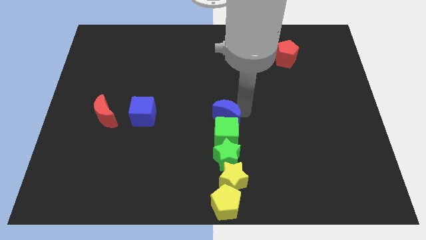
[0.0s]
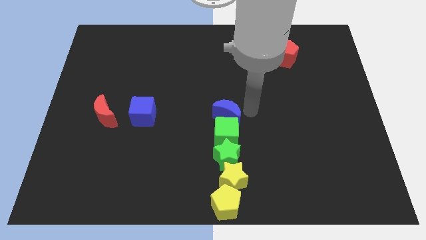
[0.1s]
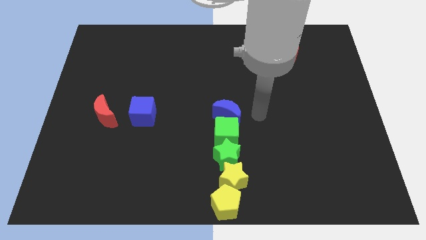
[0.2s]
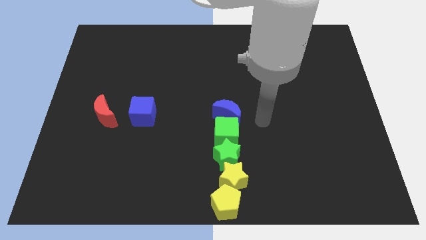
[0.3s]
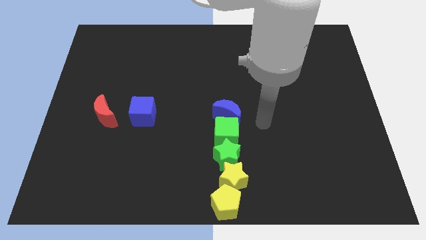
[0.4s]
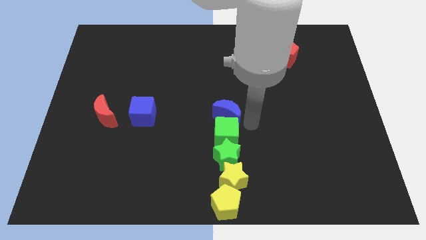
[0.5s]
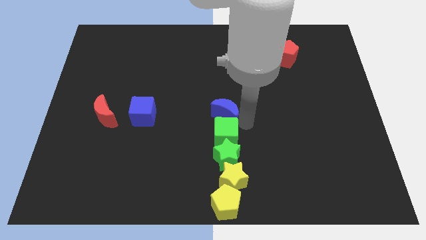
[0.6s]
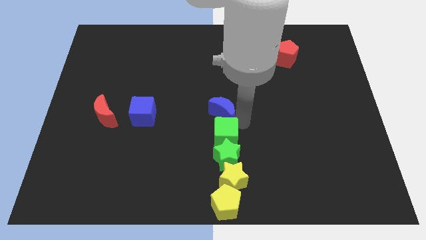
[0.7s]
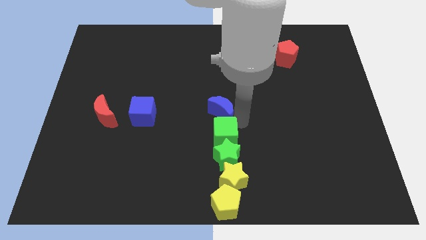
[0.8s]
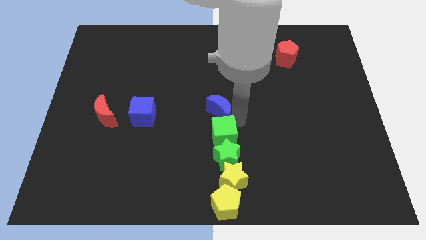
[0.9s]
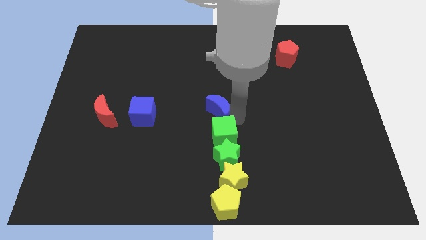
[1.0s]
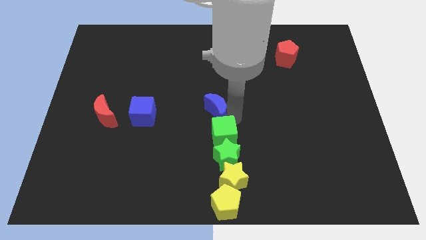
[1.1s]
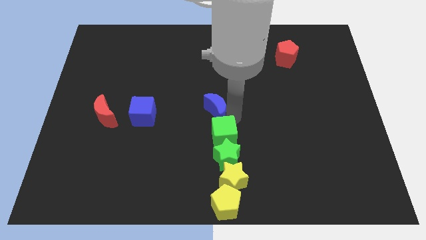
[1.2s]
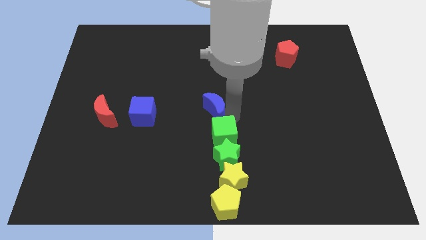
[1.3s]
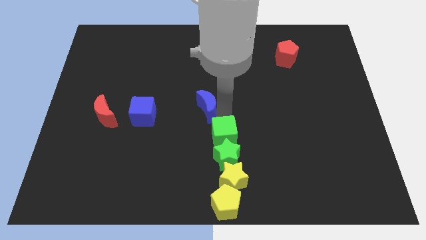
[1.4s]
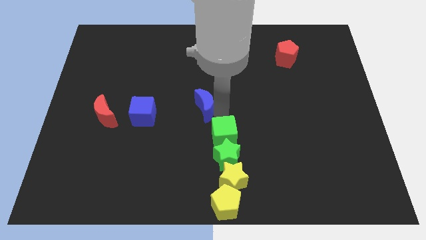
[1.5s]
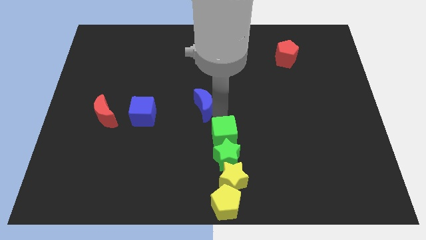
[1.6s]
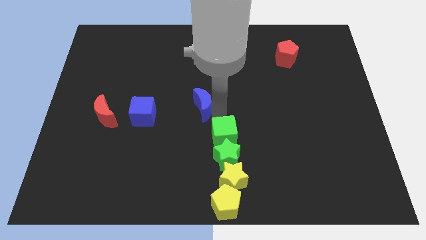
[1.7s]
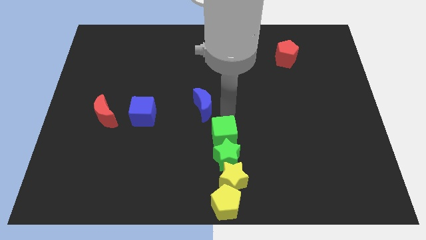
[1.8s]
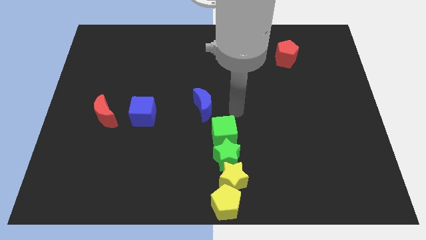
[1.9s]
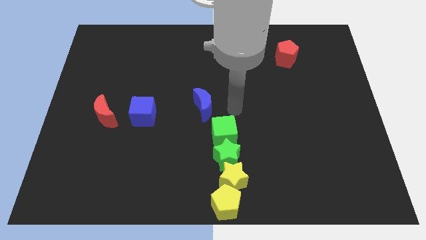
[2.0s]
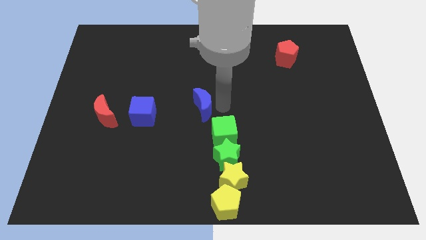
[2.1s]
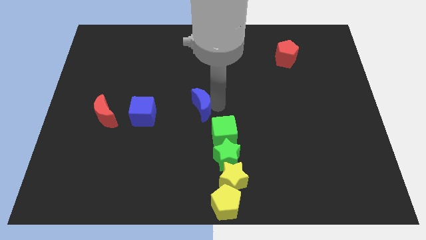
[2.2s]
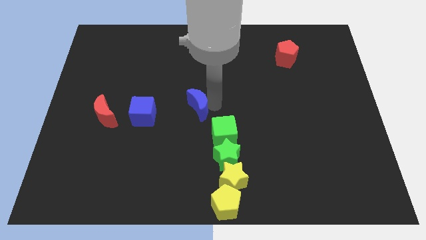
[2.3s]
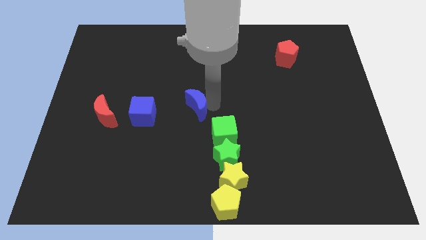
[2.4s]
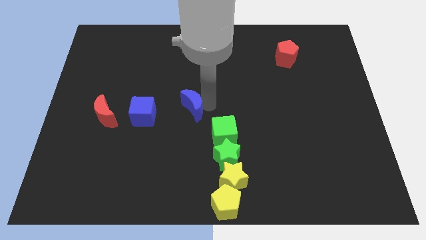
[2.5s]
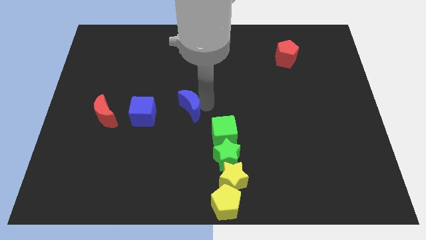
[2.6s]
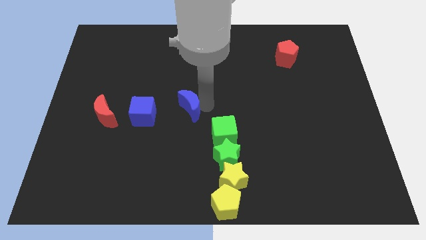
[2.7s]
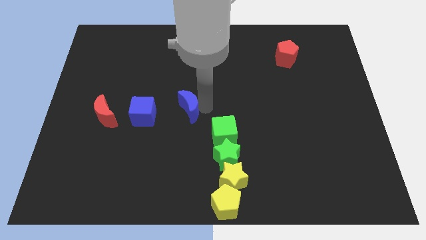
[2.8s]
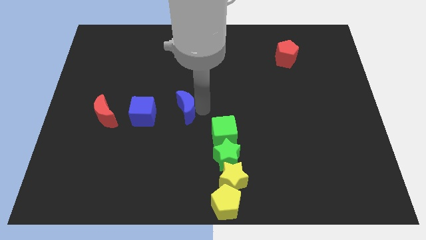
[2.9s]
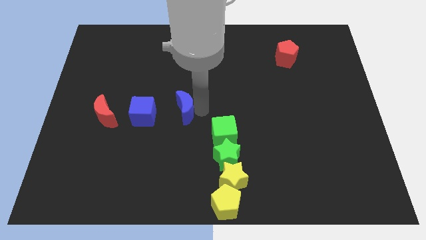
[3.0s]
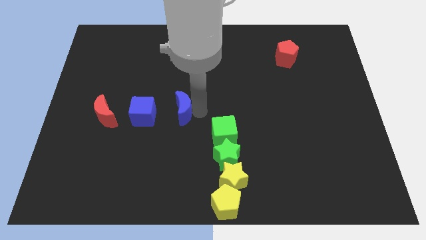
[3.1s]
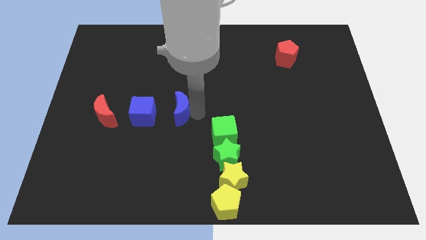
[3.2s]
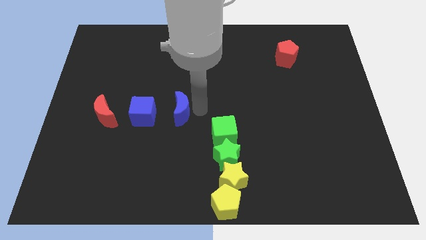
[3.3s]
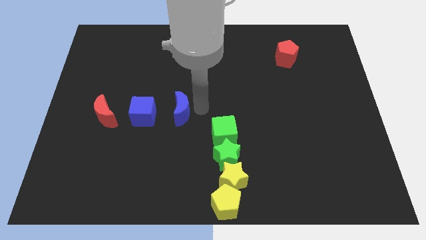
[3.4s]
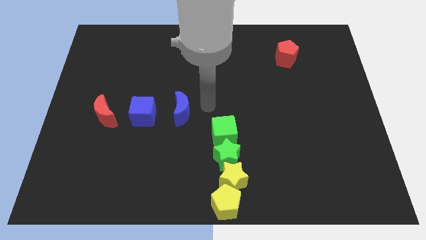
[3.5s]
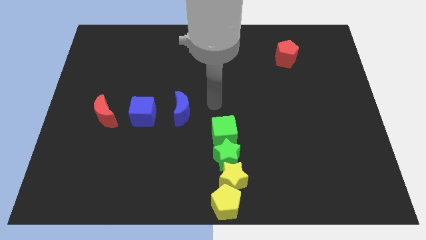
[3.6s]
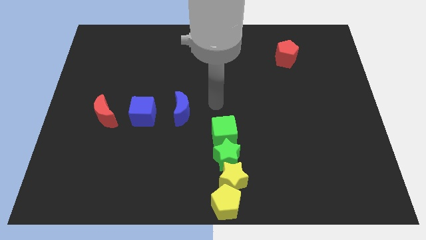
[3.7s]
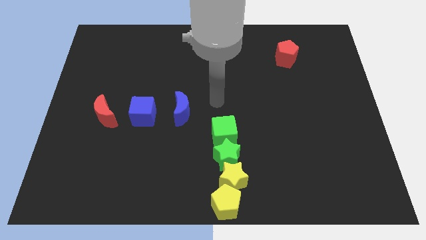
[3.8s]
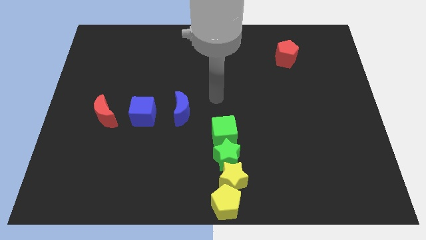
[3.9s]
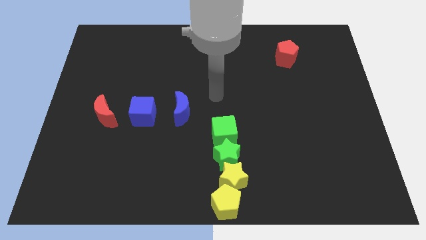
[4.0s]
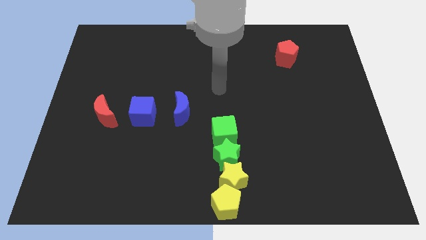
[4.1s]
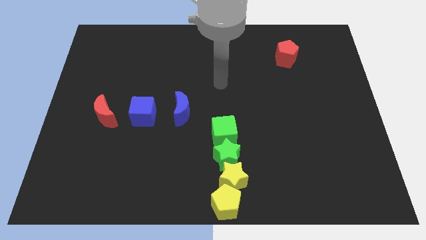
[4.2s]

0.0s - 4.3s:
push the blue crescent horizontally to the right side of the blue cube

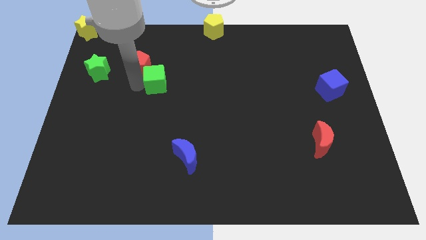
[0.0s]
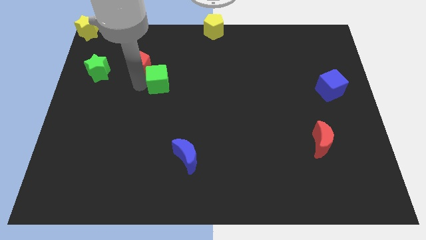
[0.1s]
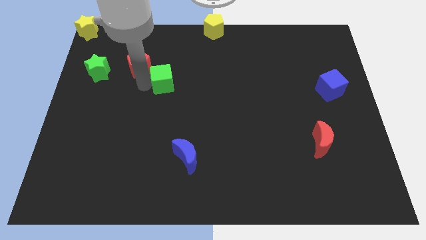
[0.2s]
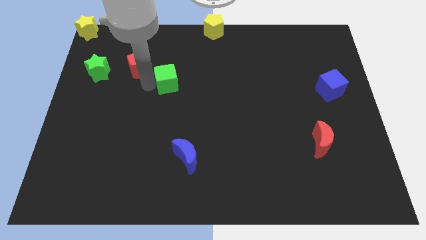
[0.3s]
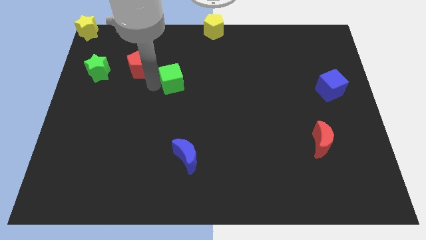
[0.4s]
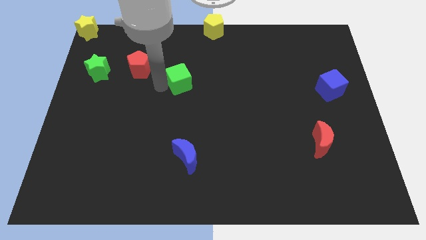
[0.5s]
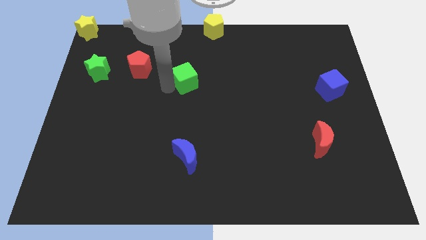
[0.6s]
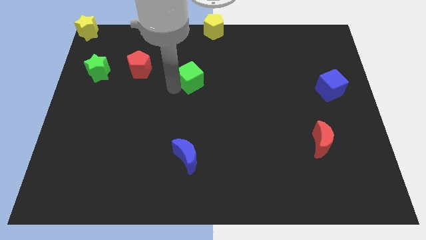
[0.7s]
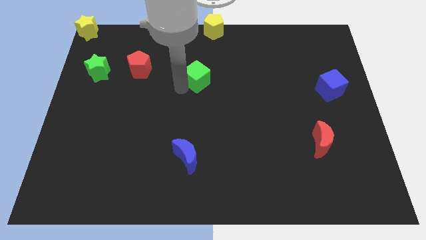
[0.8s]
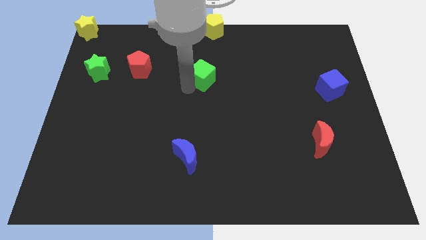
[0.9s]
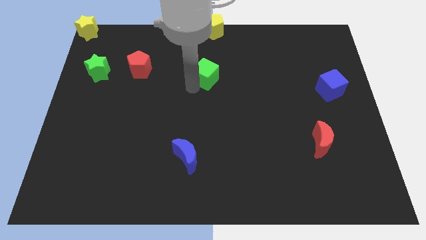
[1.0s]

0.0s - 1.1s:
move green cube below the yellow pentagon

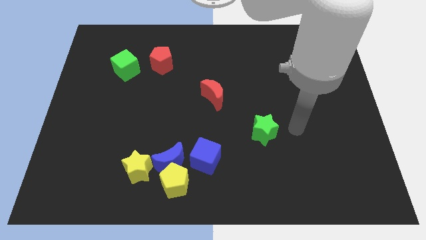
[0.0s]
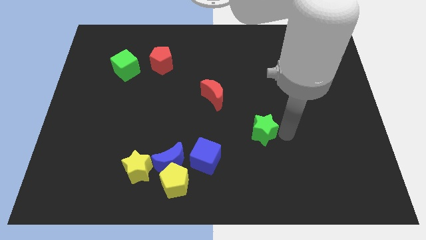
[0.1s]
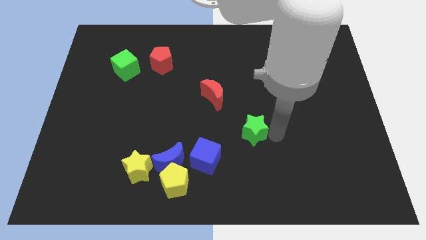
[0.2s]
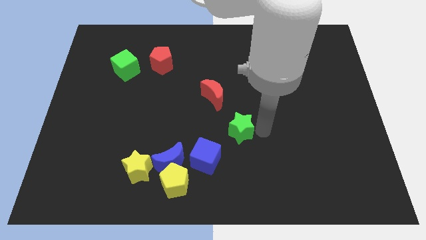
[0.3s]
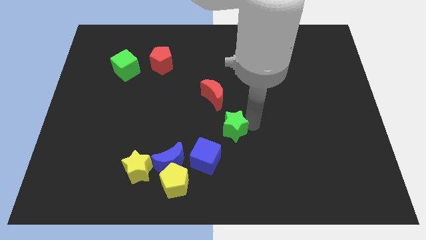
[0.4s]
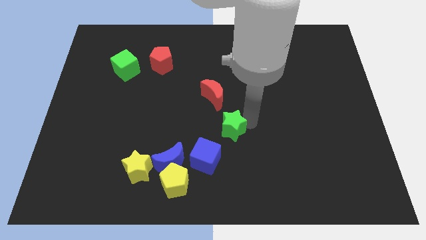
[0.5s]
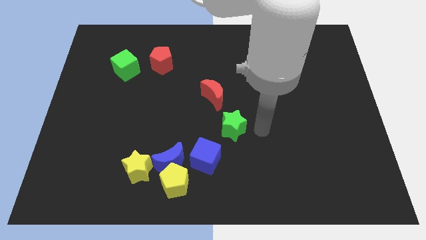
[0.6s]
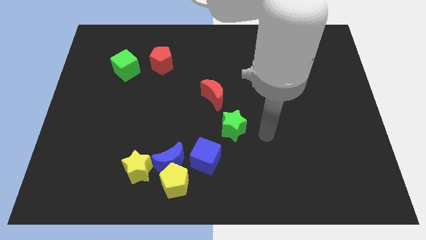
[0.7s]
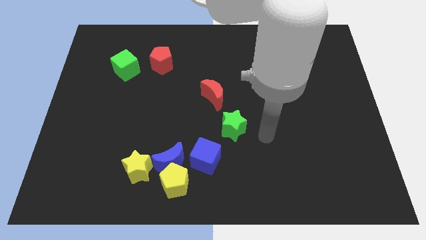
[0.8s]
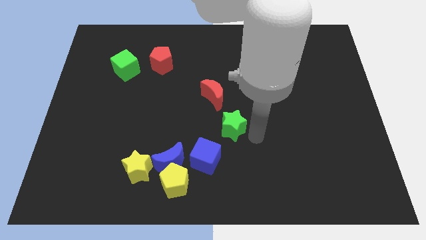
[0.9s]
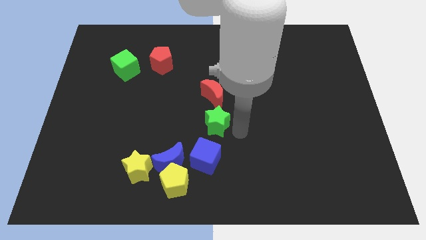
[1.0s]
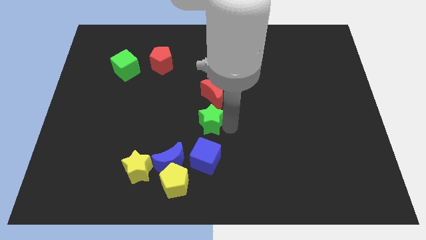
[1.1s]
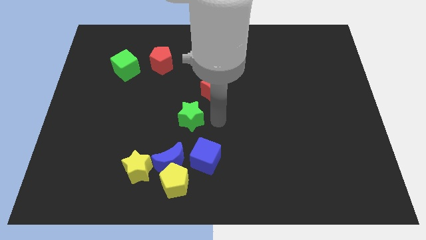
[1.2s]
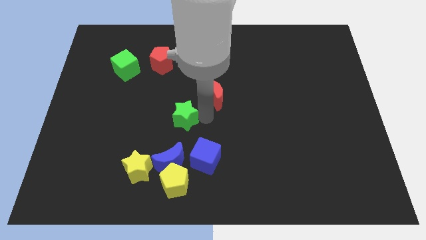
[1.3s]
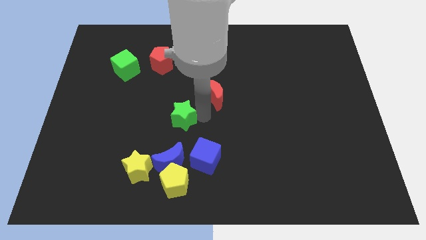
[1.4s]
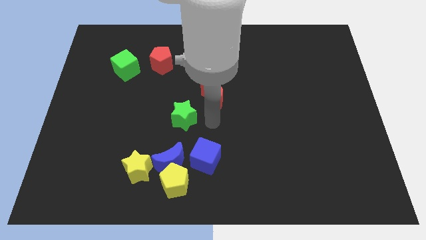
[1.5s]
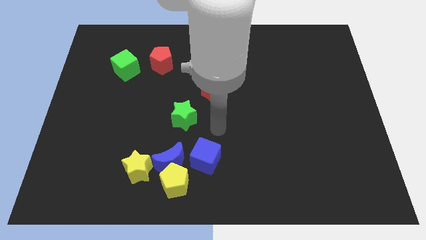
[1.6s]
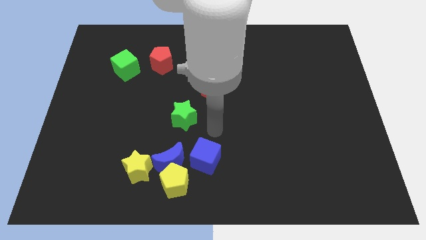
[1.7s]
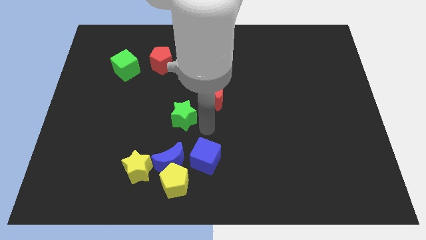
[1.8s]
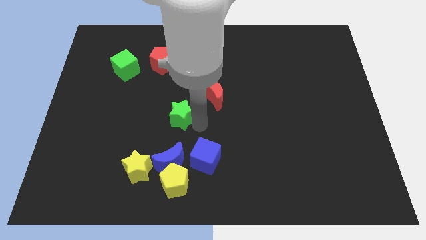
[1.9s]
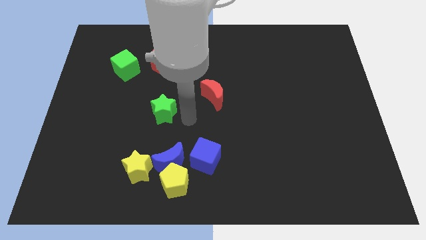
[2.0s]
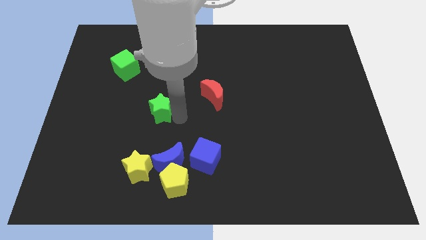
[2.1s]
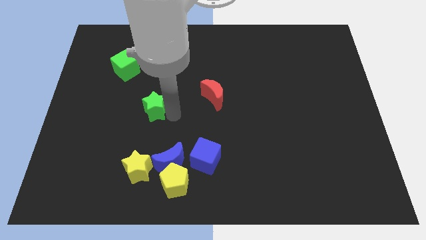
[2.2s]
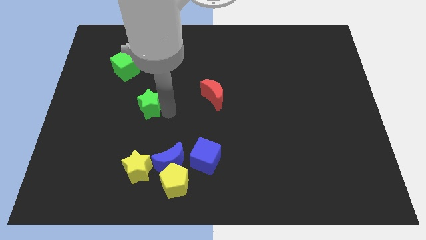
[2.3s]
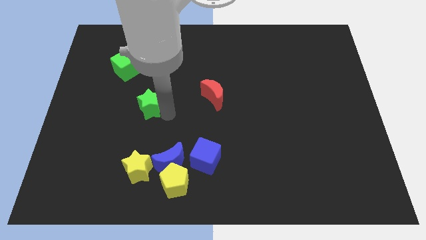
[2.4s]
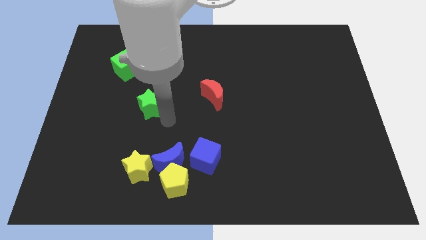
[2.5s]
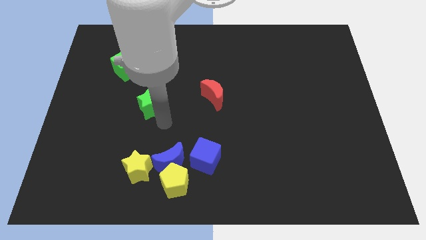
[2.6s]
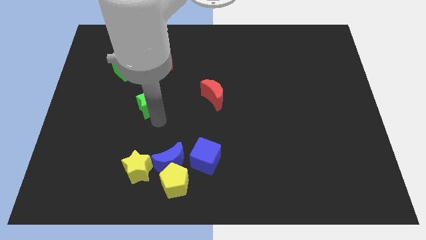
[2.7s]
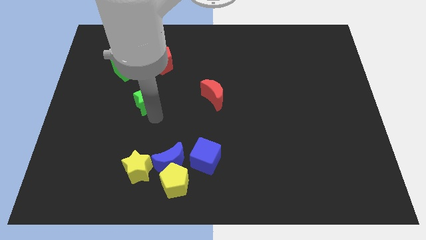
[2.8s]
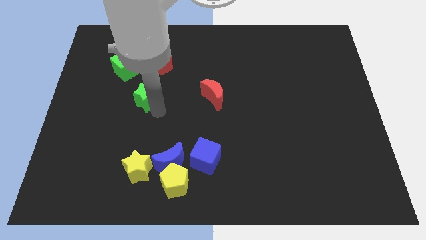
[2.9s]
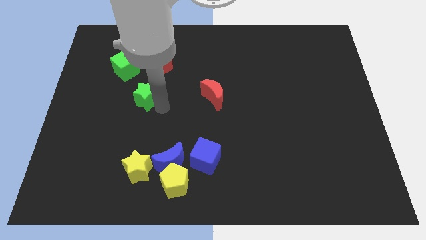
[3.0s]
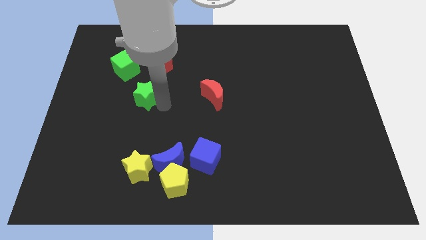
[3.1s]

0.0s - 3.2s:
place the green star towards green cube bottom

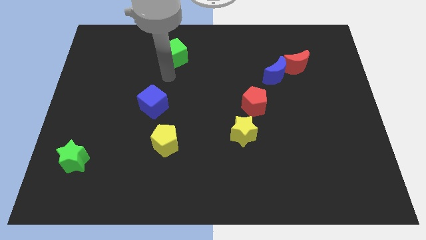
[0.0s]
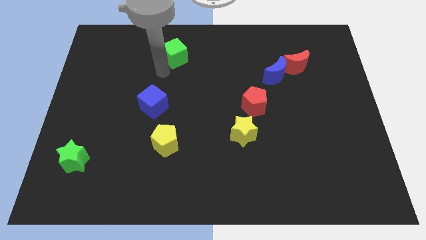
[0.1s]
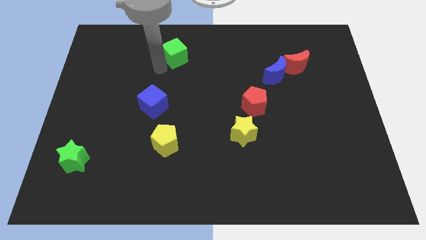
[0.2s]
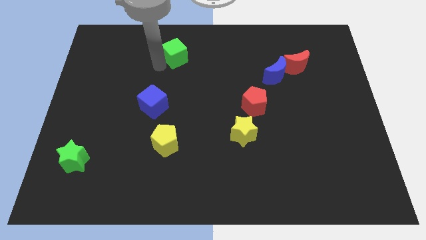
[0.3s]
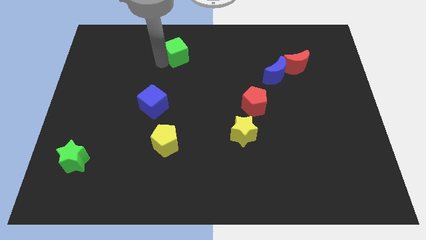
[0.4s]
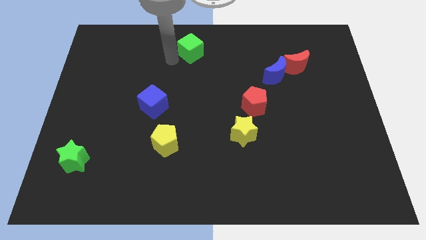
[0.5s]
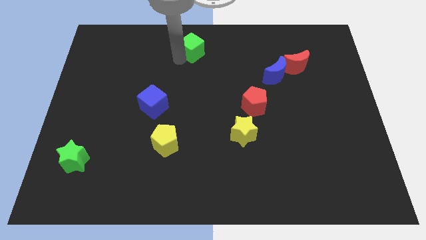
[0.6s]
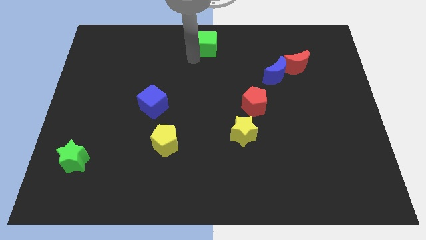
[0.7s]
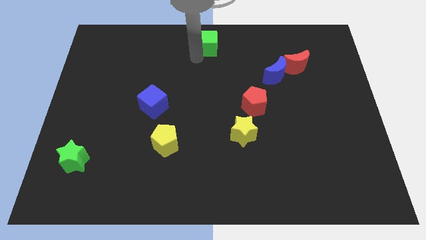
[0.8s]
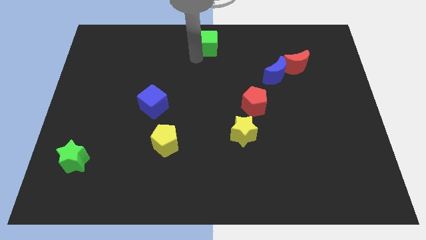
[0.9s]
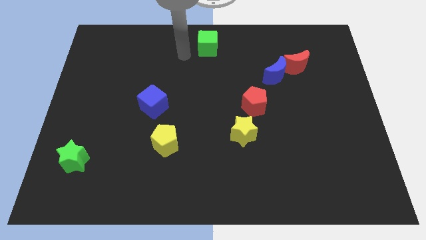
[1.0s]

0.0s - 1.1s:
move the green star to the top center of the board
